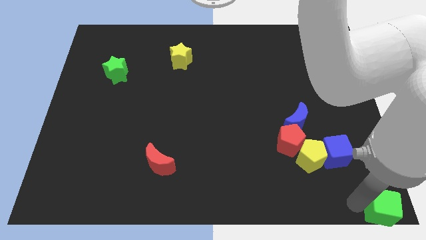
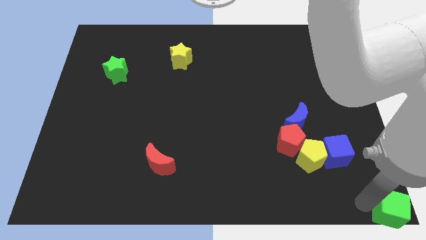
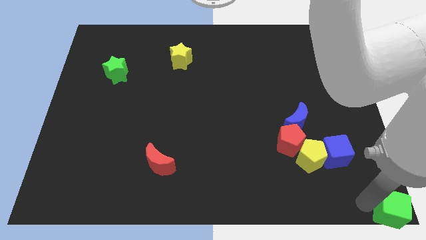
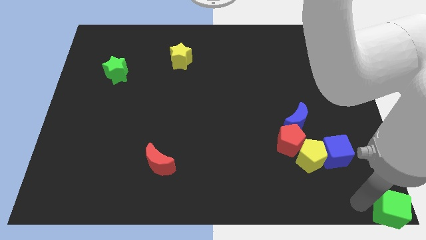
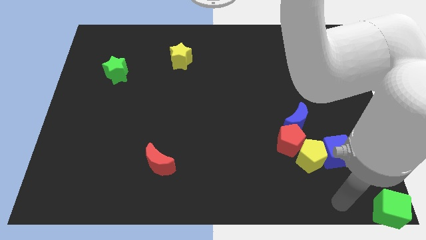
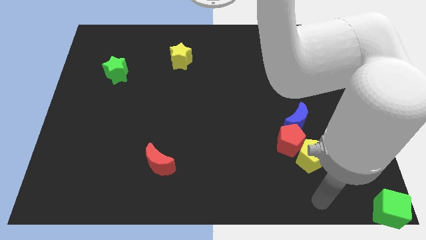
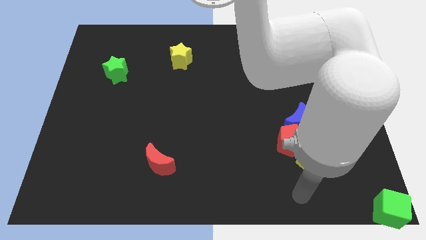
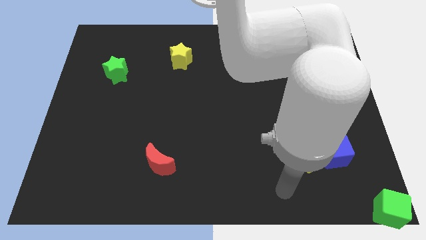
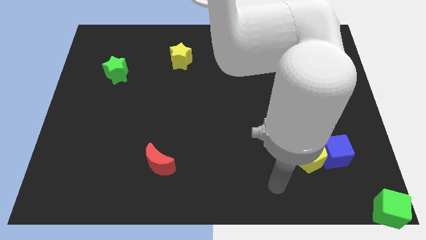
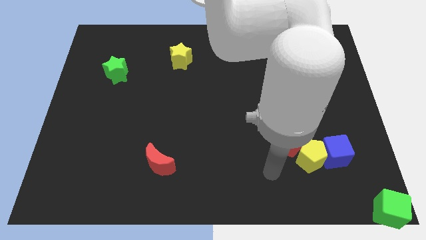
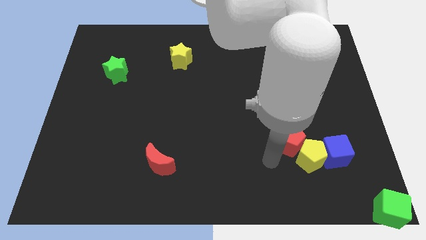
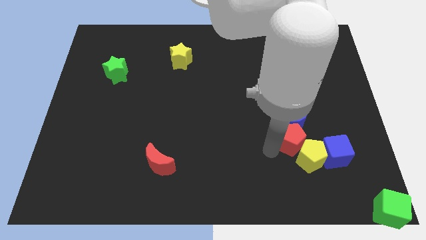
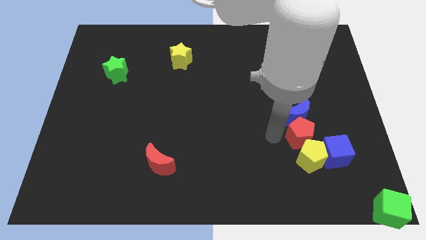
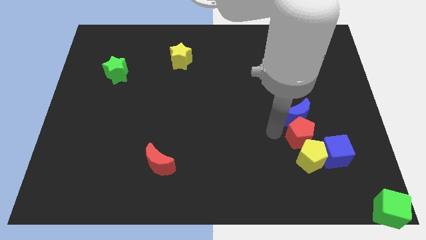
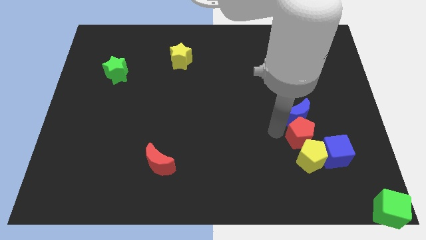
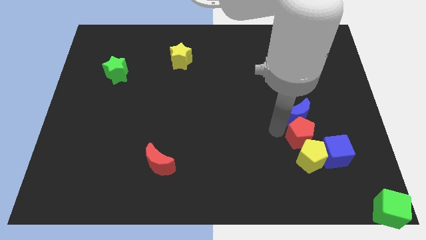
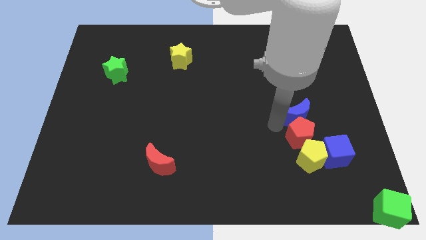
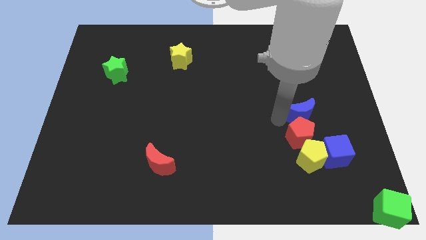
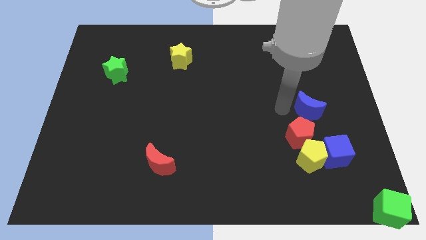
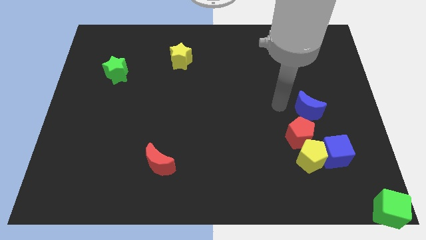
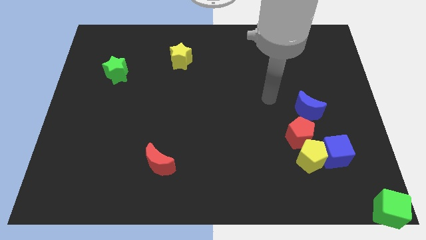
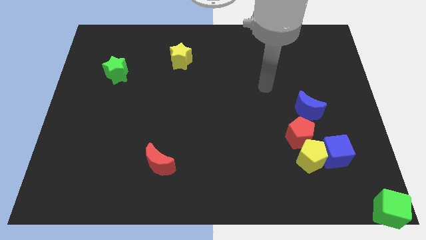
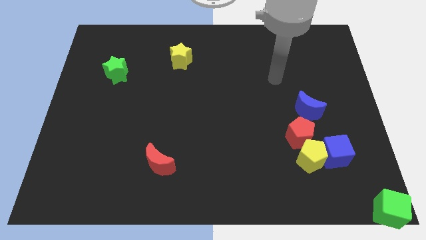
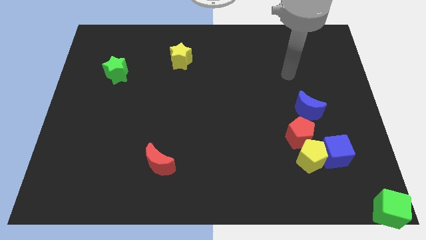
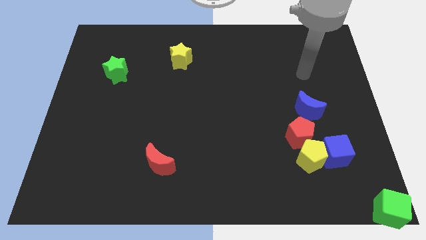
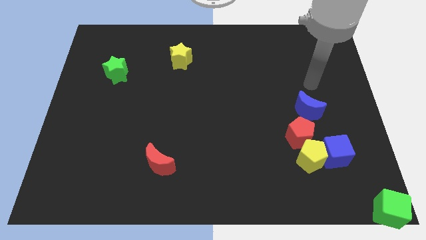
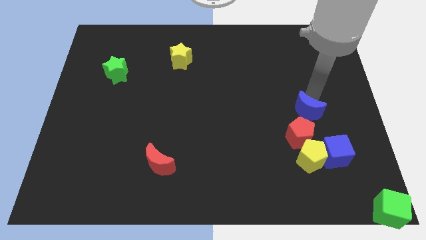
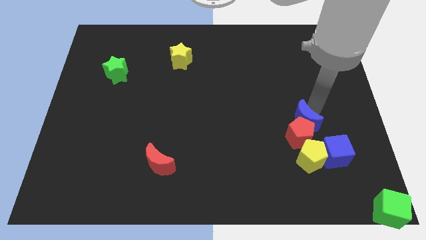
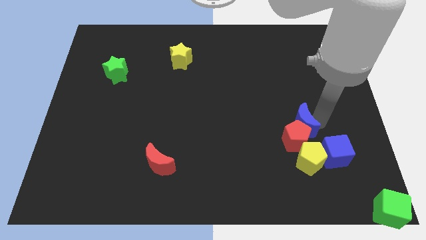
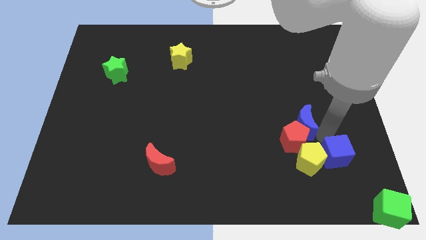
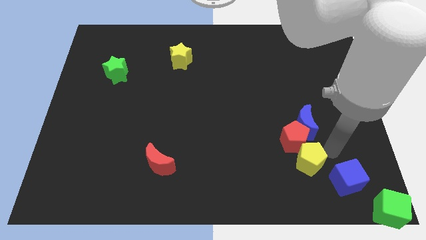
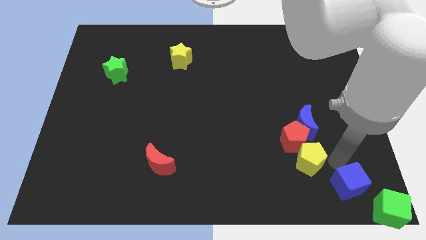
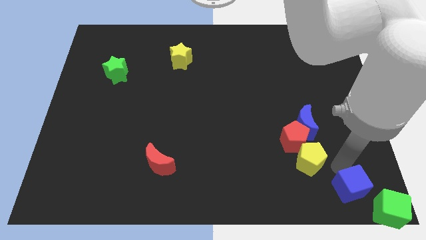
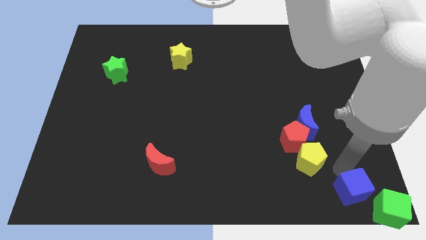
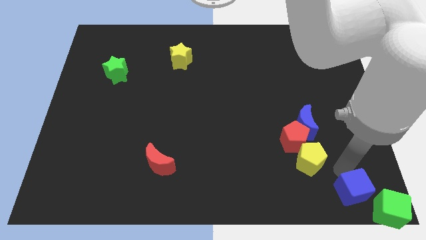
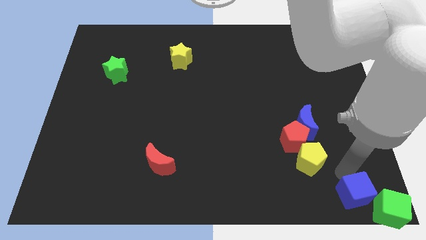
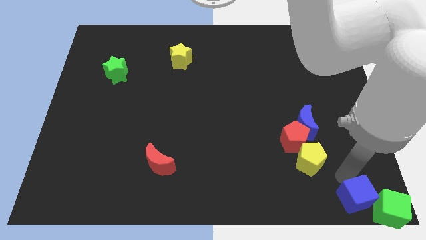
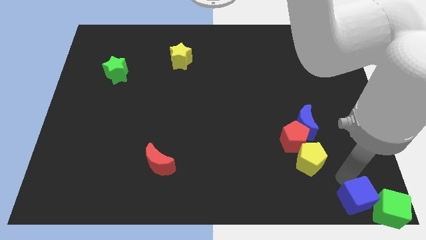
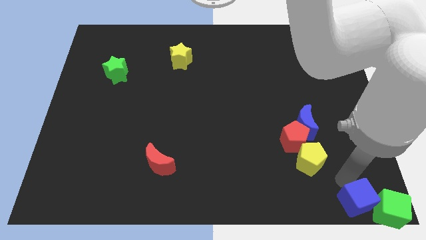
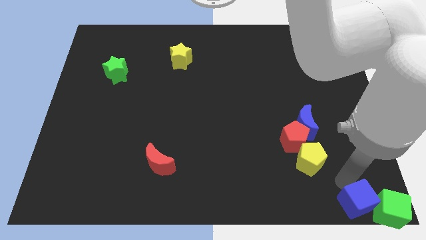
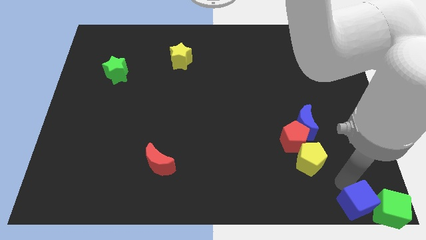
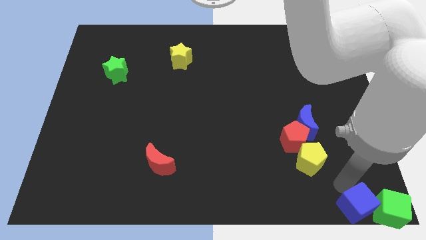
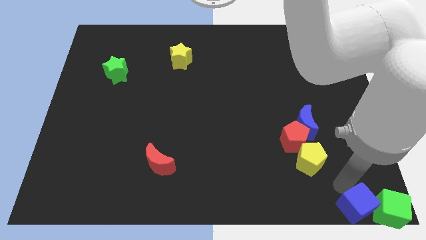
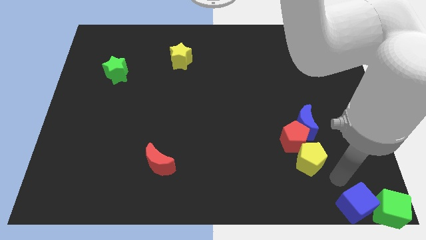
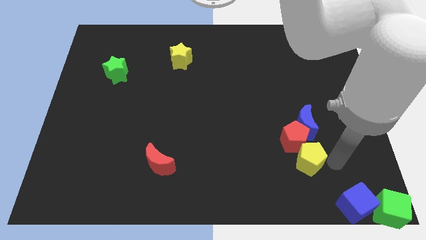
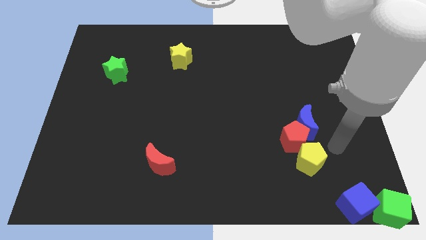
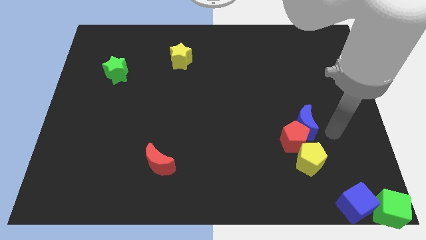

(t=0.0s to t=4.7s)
place the blue cube to the left of green cube

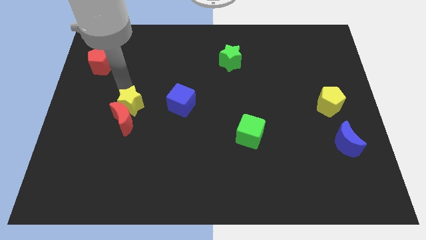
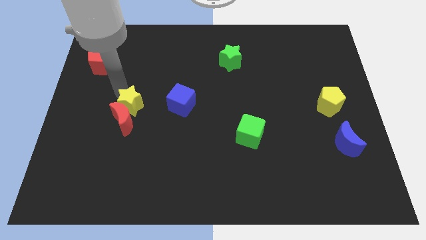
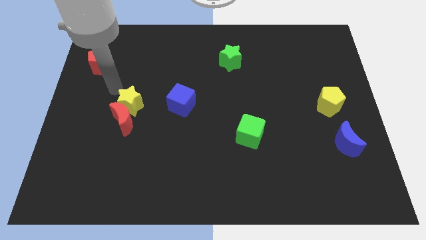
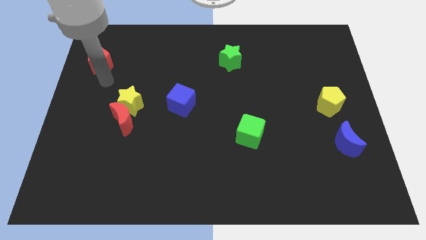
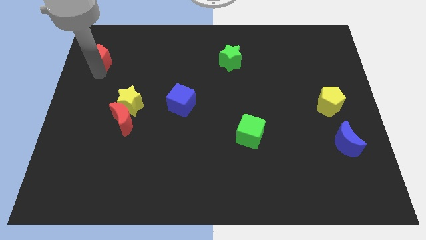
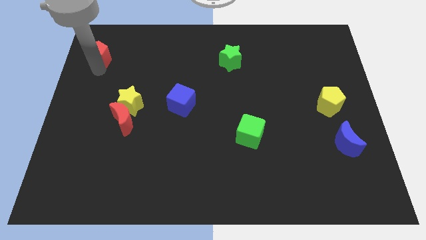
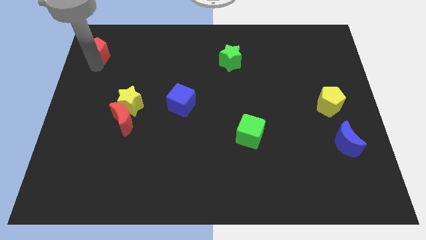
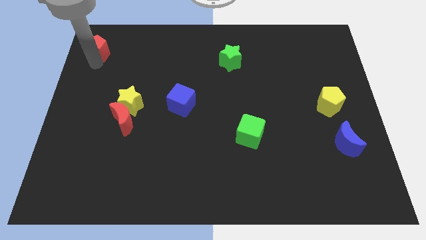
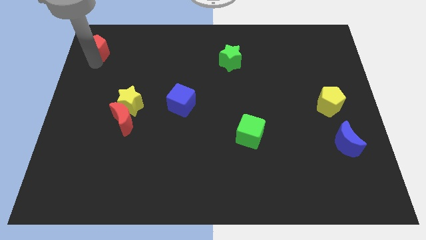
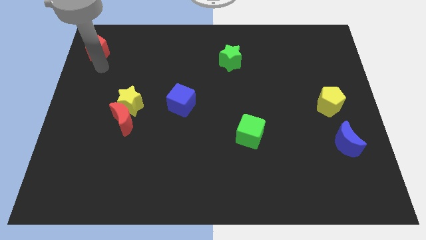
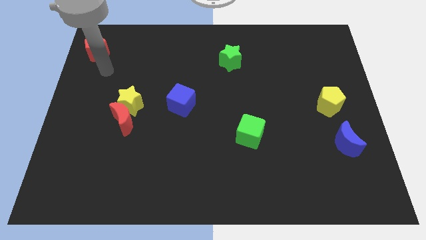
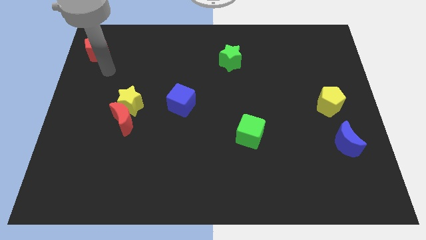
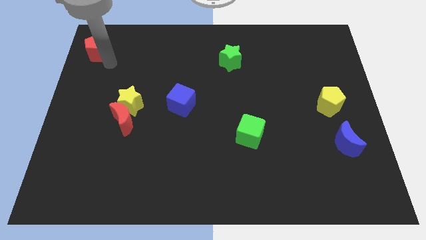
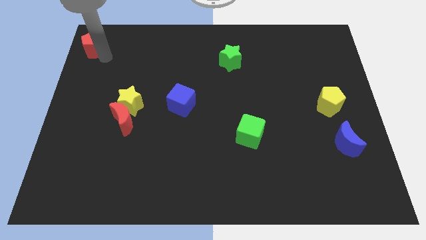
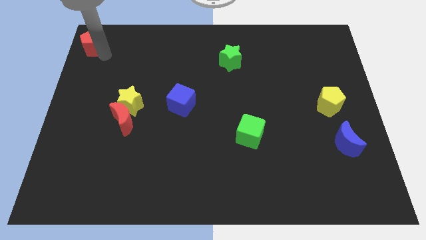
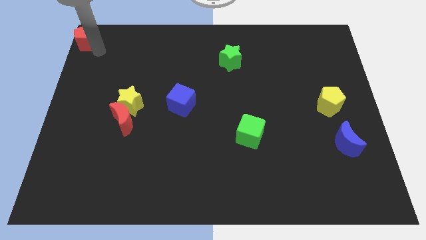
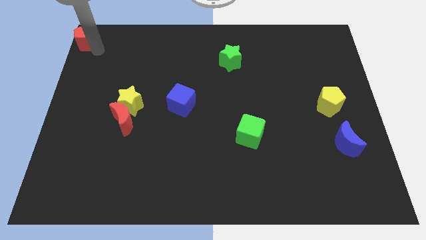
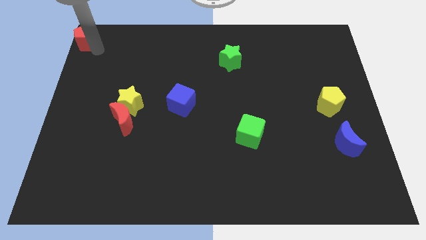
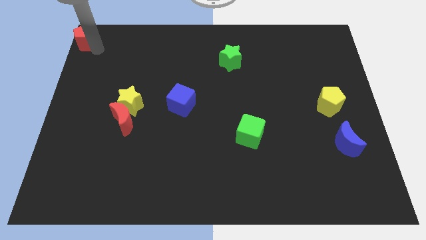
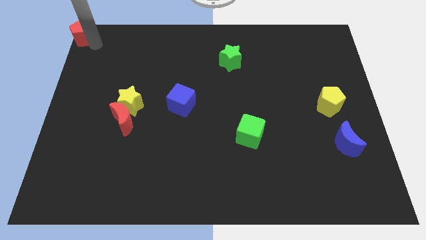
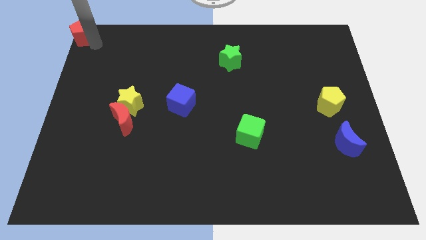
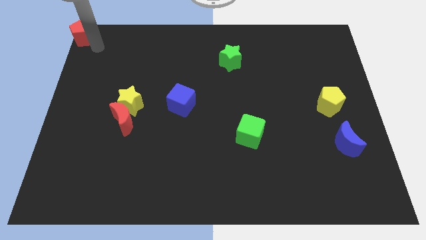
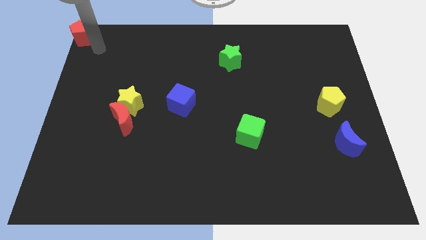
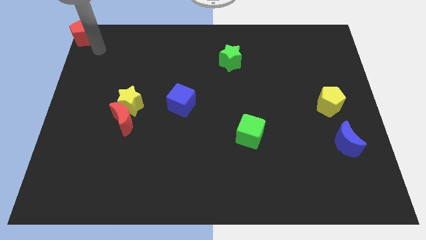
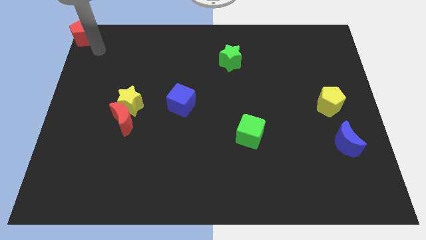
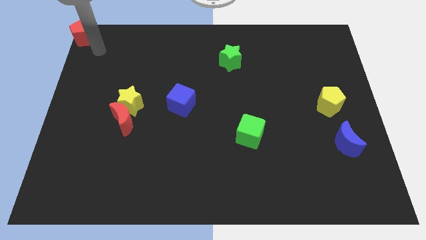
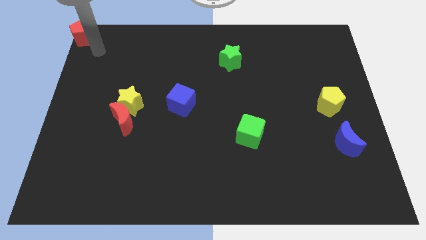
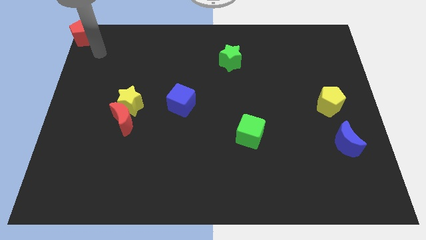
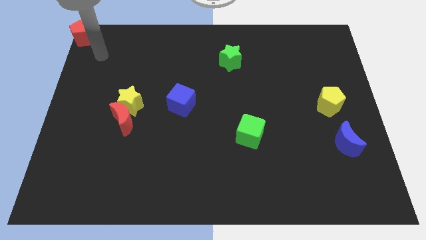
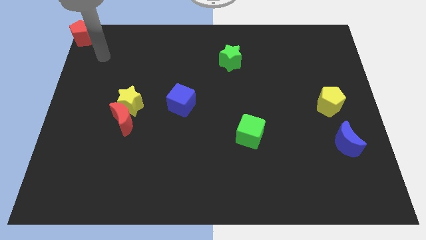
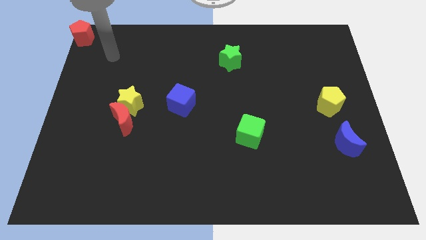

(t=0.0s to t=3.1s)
move the red pentagon to the top left corner

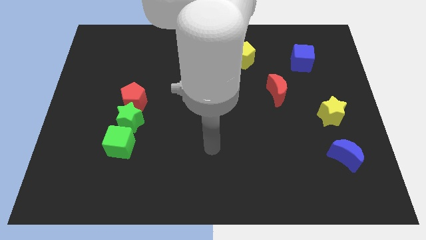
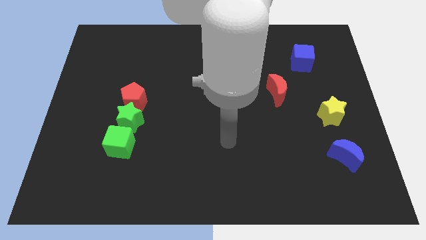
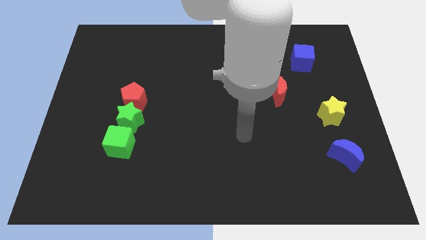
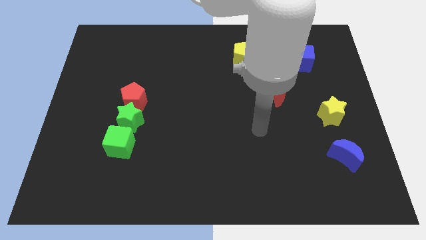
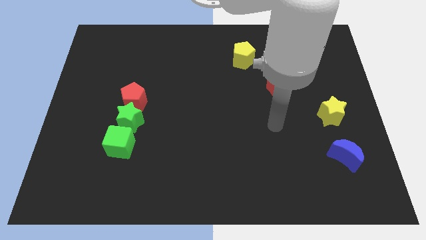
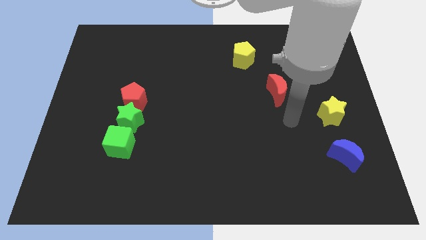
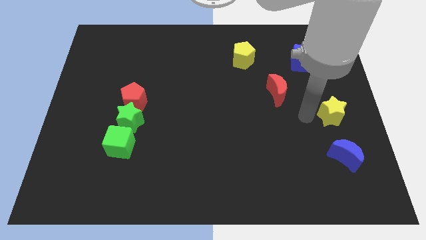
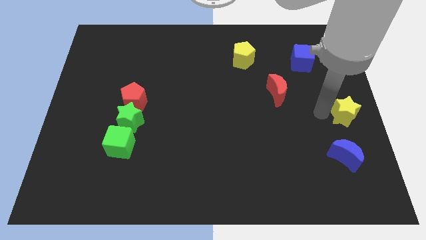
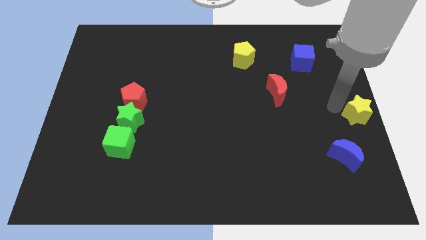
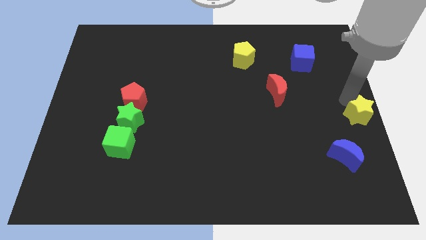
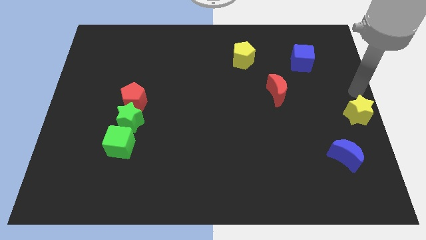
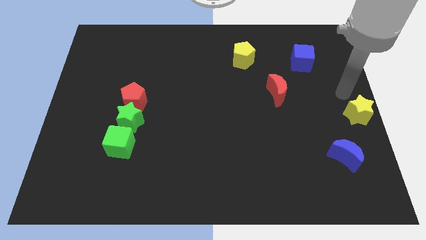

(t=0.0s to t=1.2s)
push the yellow star to the left center of the board

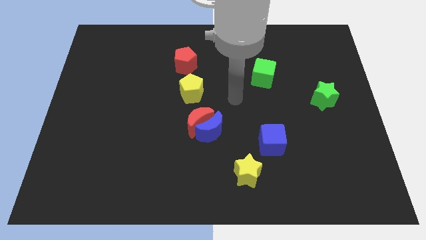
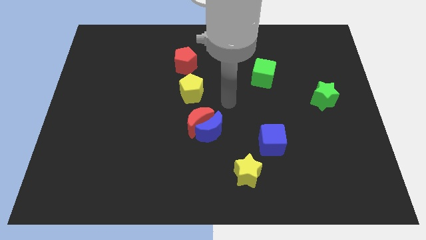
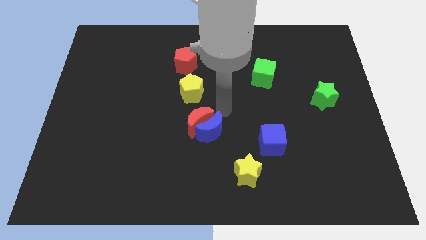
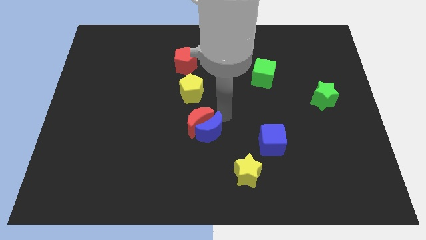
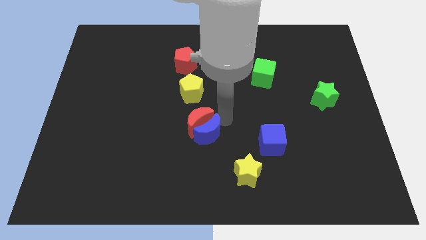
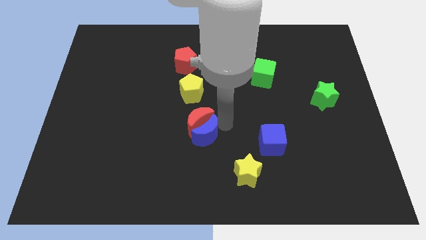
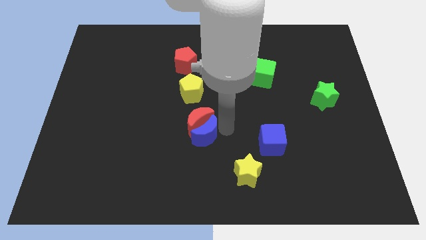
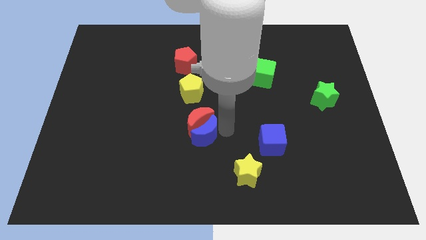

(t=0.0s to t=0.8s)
touch the blue moon
